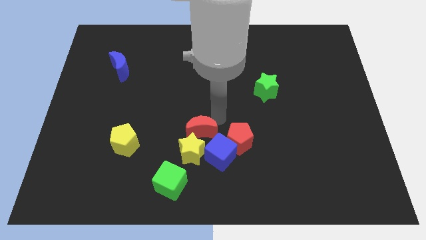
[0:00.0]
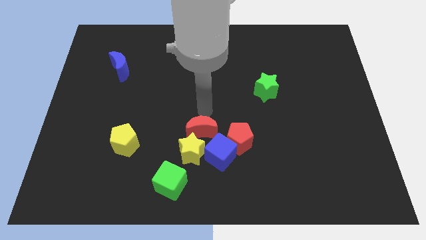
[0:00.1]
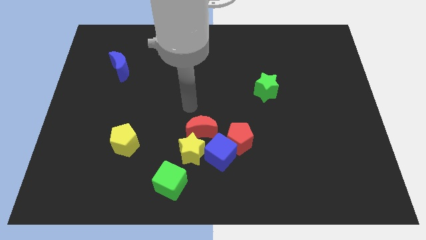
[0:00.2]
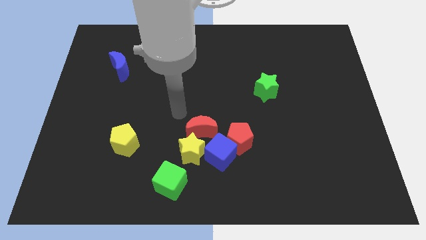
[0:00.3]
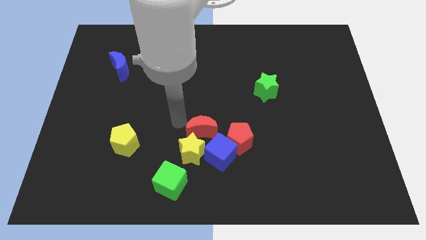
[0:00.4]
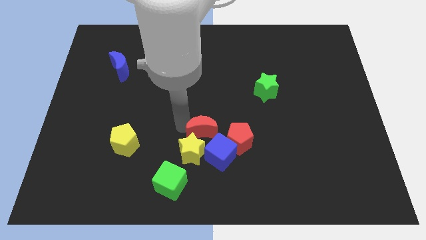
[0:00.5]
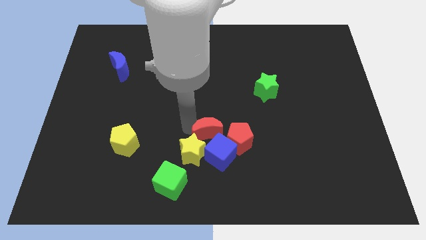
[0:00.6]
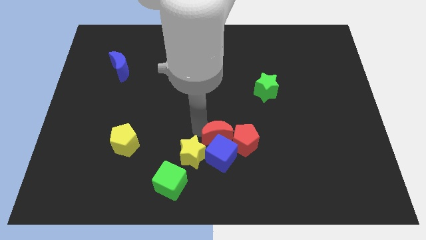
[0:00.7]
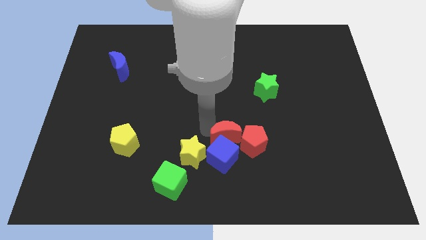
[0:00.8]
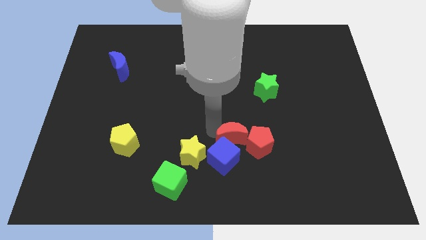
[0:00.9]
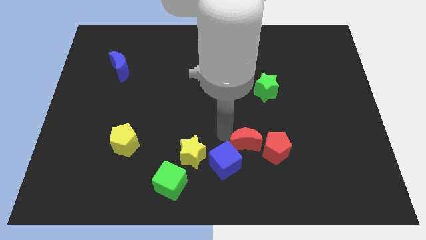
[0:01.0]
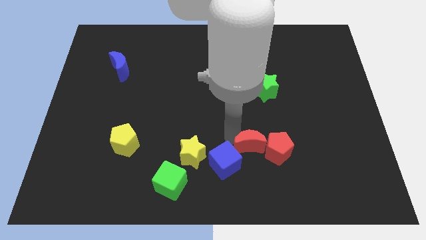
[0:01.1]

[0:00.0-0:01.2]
push the red moon into the red pentagon

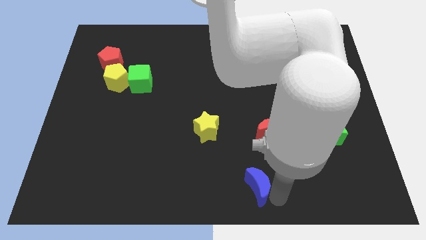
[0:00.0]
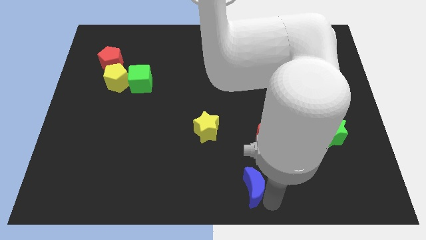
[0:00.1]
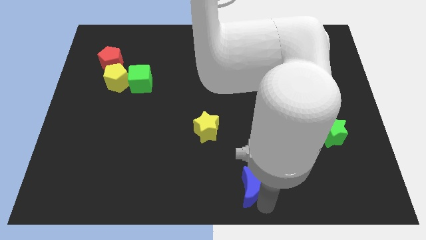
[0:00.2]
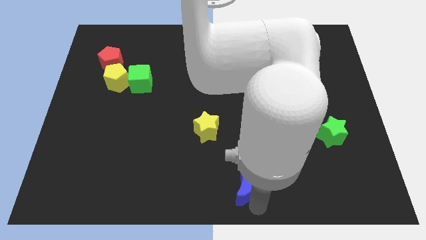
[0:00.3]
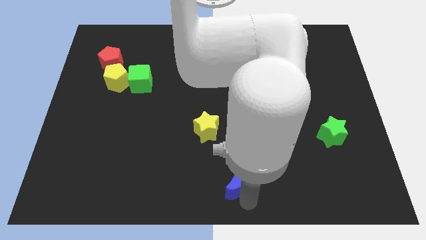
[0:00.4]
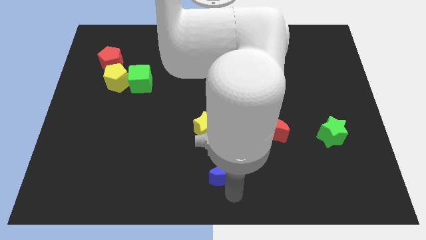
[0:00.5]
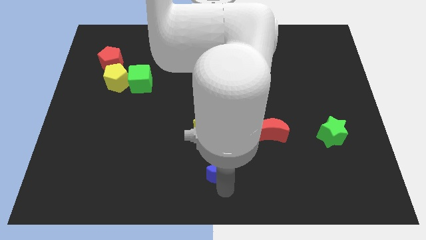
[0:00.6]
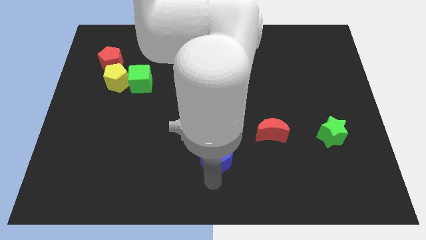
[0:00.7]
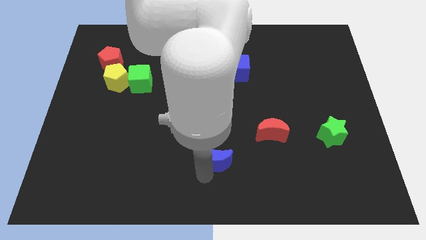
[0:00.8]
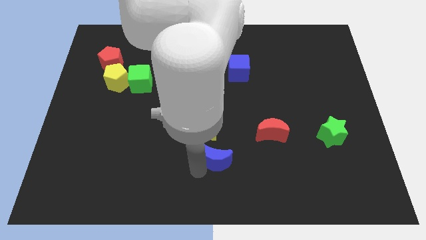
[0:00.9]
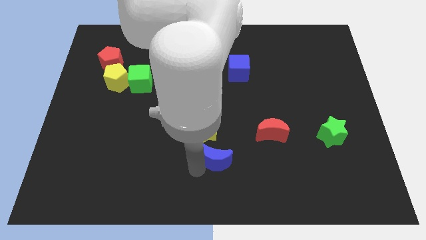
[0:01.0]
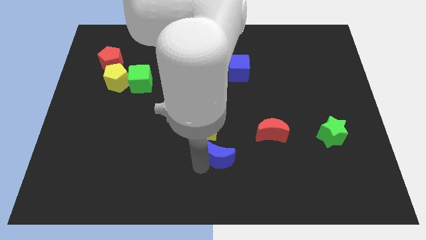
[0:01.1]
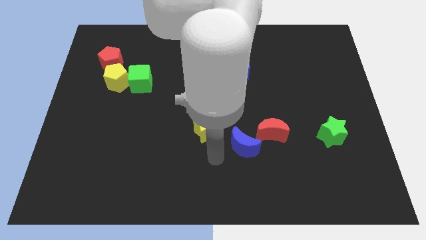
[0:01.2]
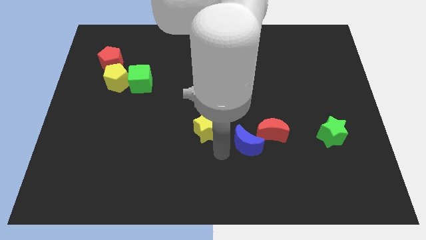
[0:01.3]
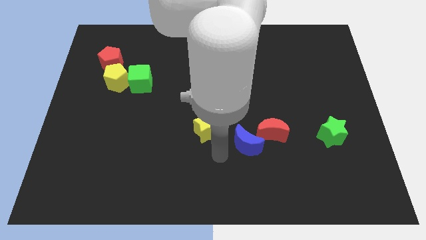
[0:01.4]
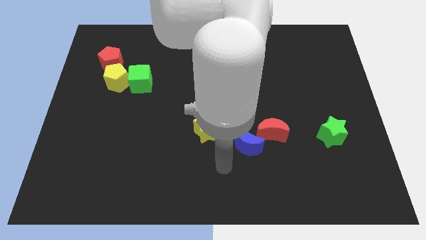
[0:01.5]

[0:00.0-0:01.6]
place the blue crescent top left of the red crescent

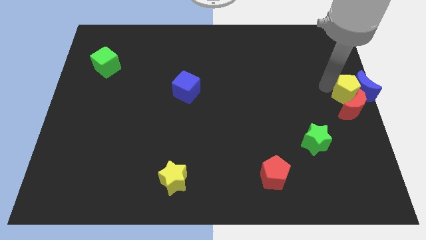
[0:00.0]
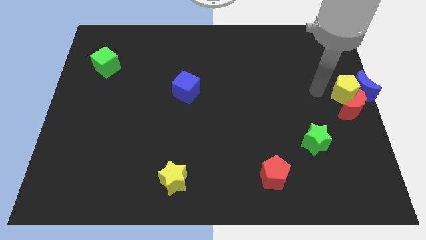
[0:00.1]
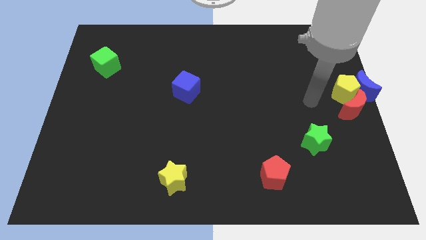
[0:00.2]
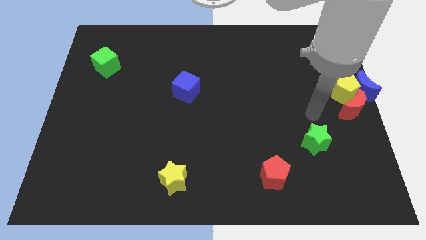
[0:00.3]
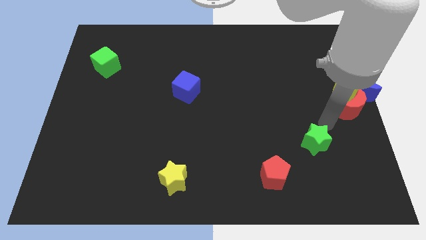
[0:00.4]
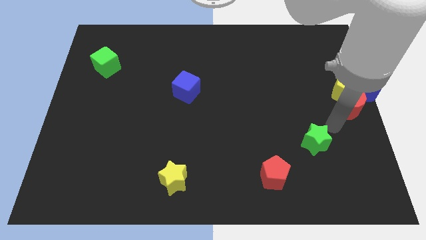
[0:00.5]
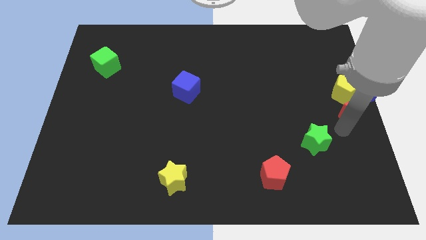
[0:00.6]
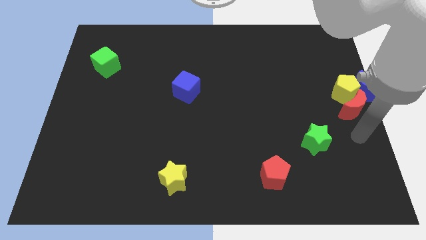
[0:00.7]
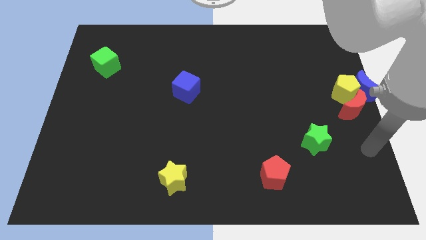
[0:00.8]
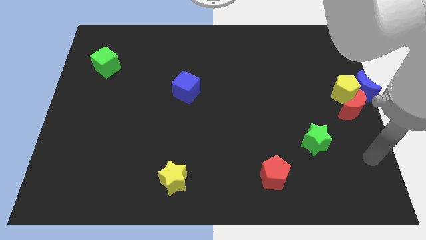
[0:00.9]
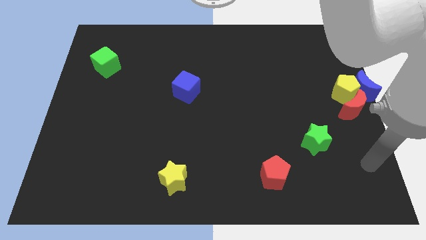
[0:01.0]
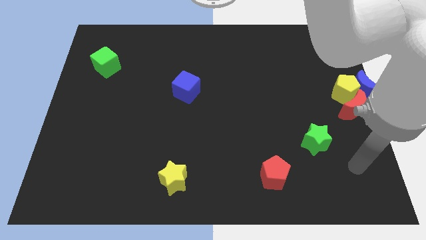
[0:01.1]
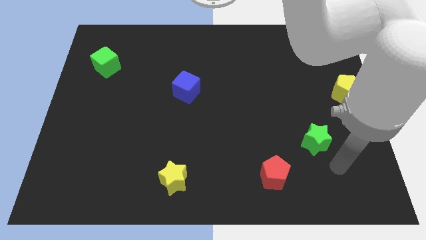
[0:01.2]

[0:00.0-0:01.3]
move your arm away from the yellow pentagon

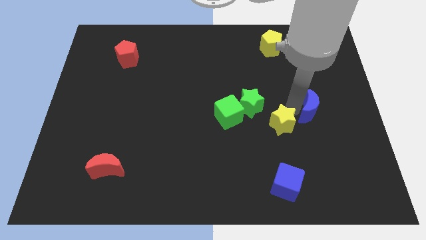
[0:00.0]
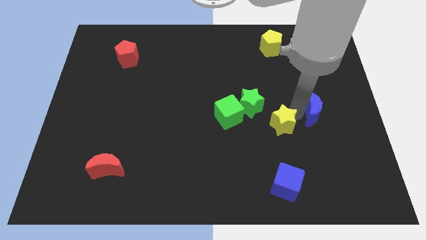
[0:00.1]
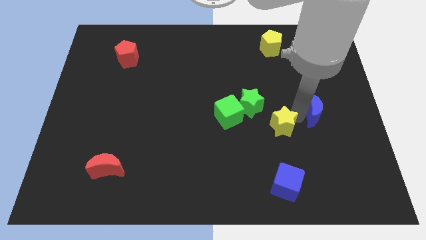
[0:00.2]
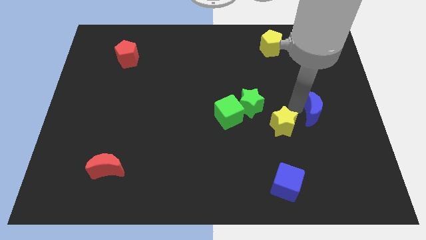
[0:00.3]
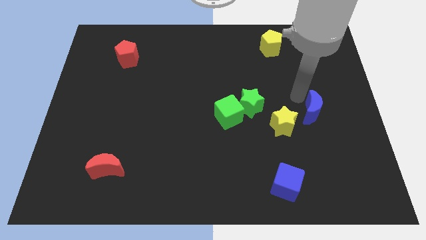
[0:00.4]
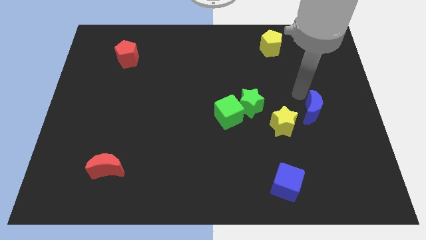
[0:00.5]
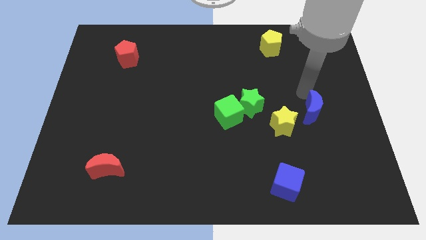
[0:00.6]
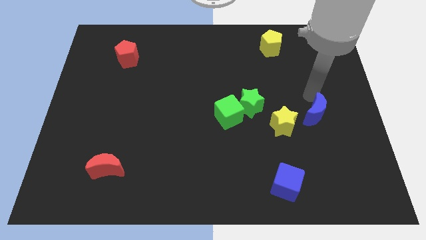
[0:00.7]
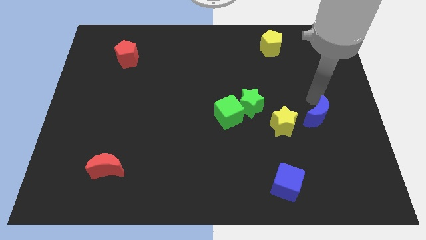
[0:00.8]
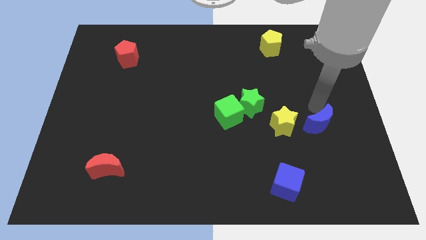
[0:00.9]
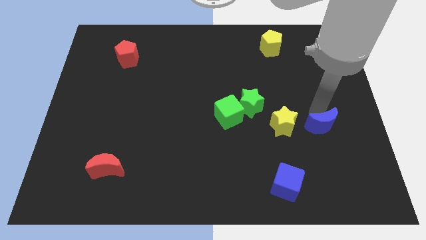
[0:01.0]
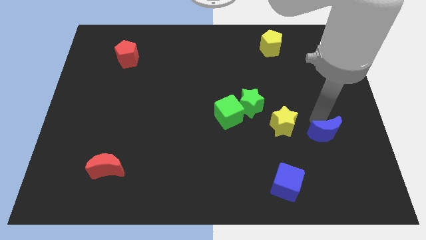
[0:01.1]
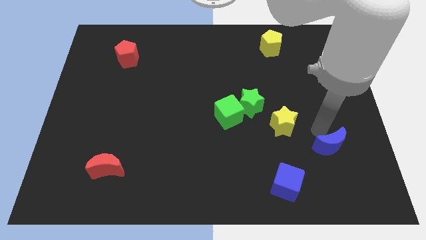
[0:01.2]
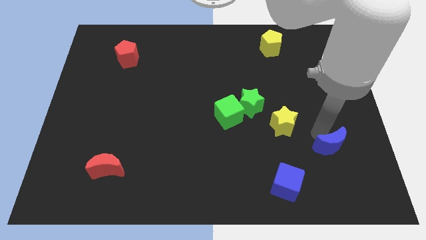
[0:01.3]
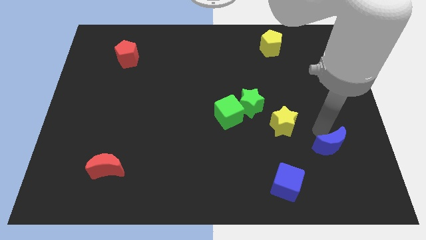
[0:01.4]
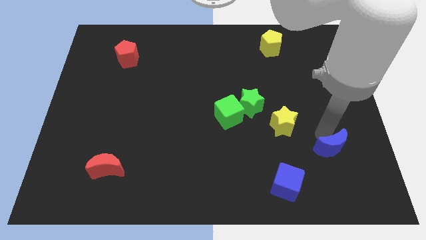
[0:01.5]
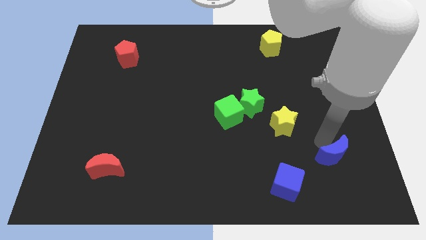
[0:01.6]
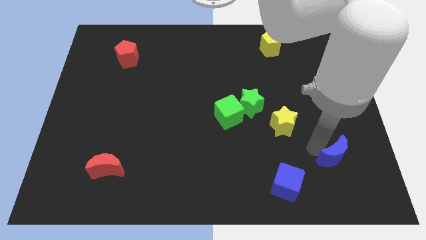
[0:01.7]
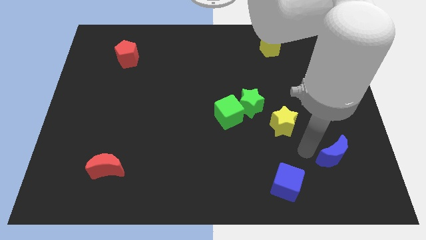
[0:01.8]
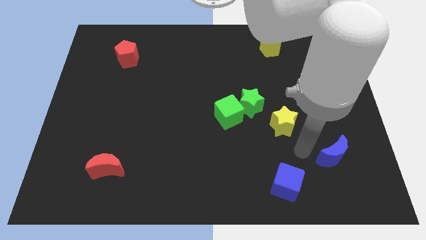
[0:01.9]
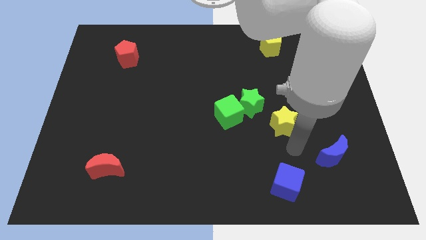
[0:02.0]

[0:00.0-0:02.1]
separate blue moon from yellow star

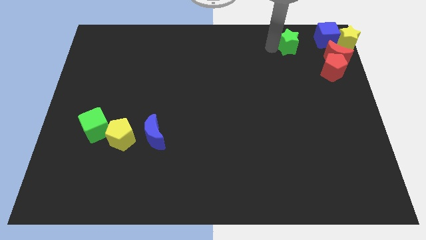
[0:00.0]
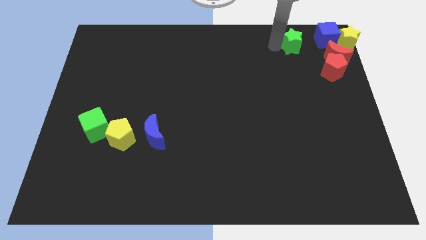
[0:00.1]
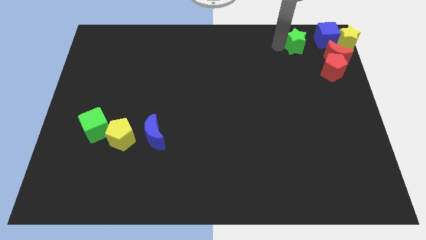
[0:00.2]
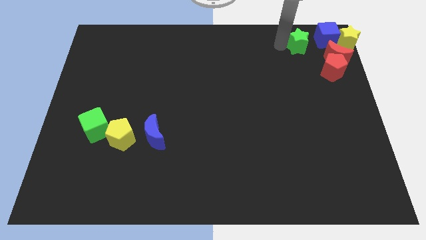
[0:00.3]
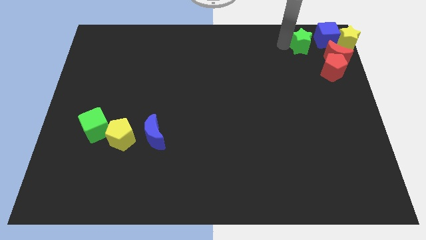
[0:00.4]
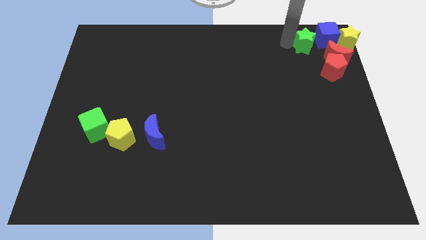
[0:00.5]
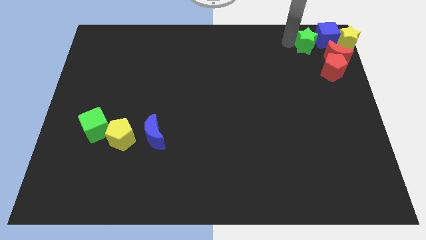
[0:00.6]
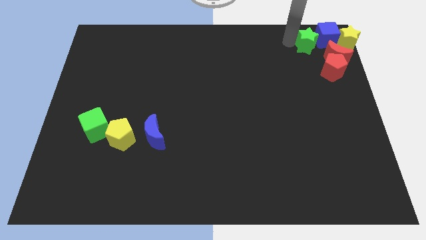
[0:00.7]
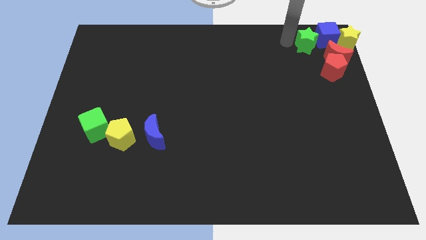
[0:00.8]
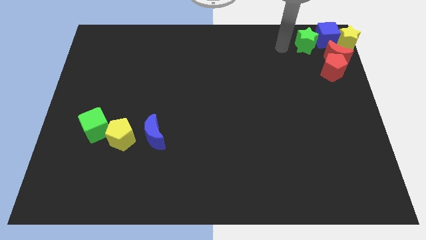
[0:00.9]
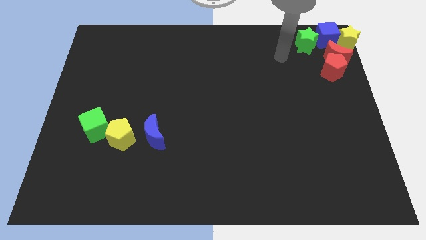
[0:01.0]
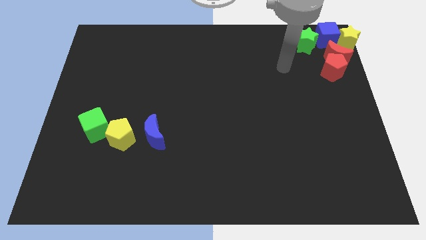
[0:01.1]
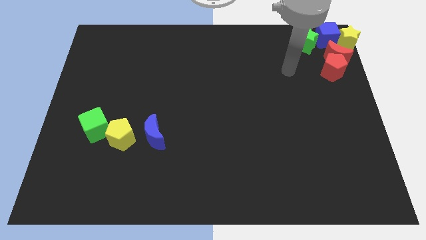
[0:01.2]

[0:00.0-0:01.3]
place green star to the left side of the blue cube

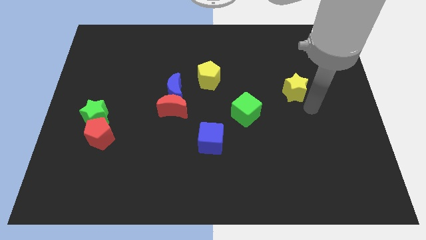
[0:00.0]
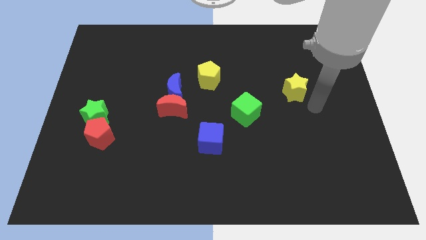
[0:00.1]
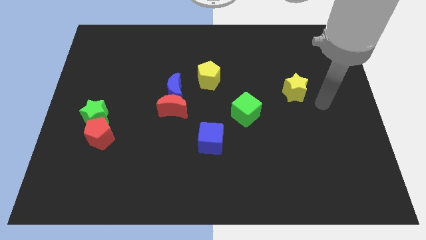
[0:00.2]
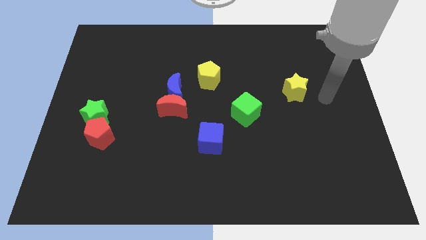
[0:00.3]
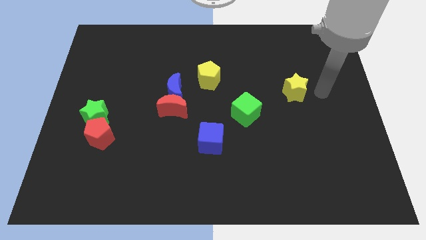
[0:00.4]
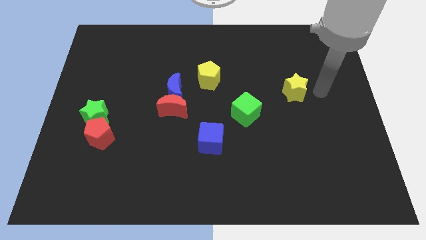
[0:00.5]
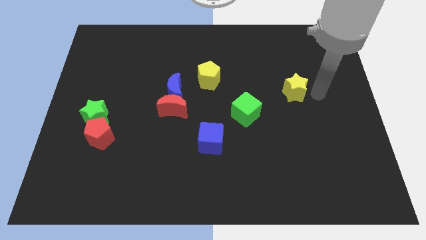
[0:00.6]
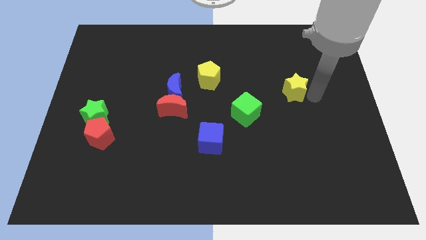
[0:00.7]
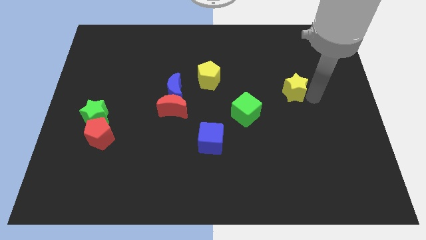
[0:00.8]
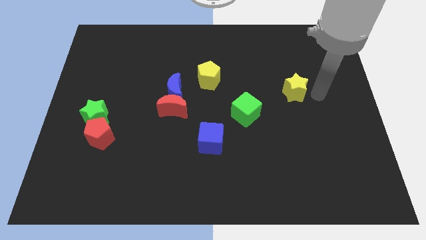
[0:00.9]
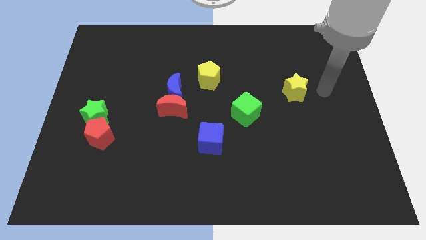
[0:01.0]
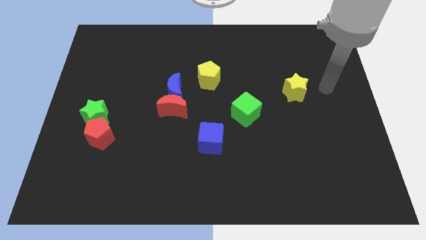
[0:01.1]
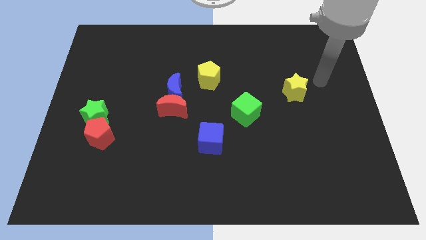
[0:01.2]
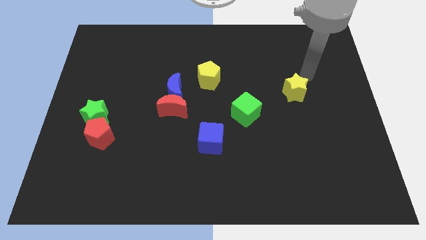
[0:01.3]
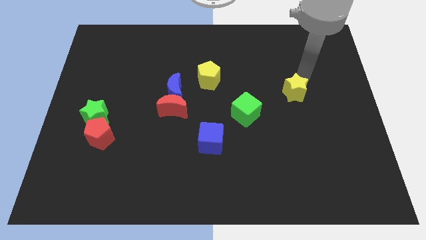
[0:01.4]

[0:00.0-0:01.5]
go near the yellow star
